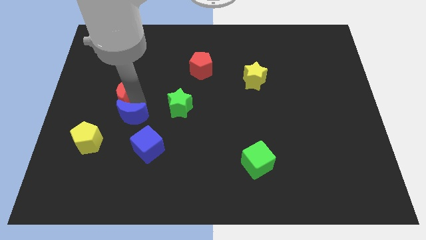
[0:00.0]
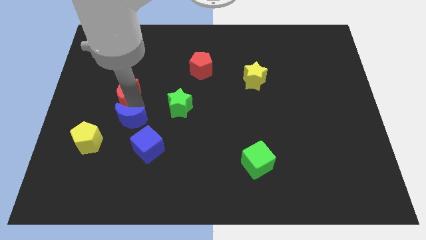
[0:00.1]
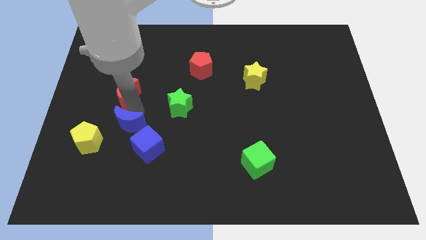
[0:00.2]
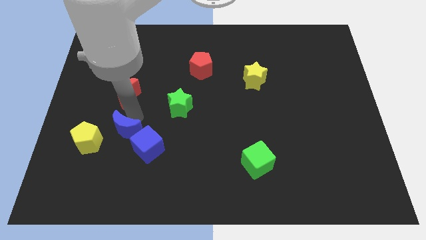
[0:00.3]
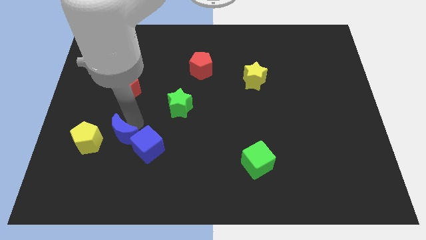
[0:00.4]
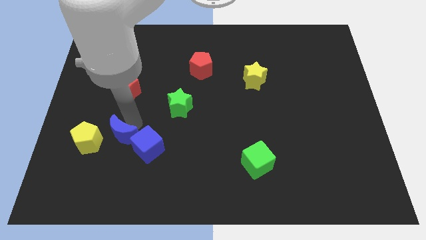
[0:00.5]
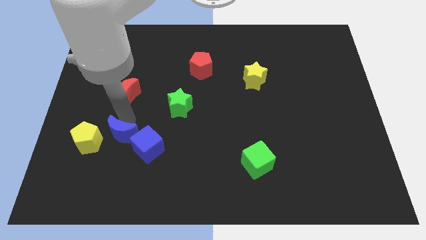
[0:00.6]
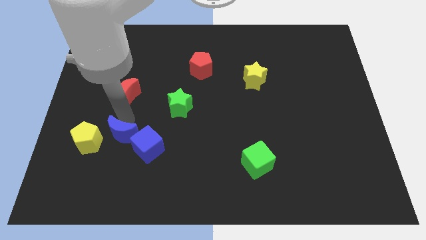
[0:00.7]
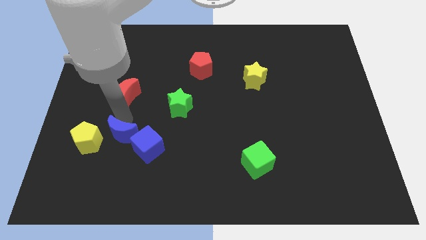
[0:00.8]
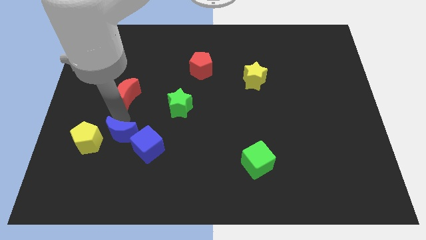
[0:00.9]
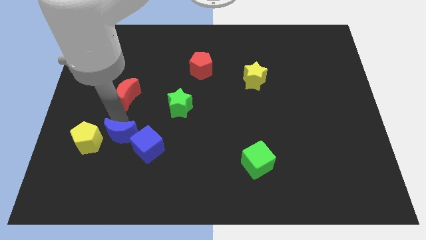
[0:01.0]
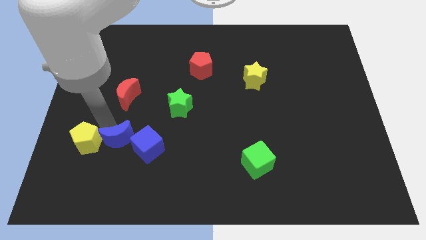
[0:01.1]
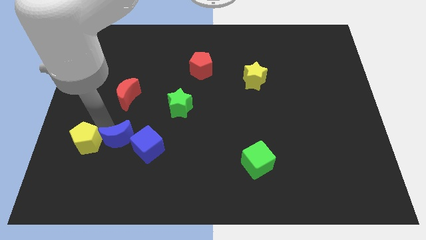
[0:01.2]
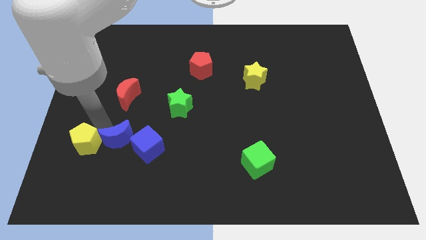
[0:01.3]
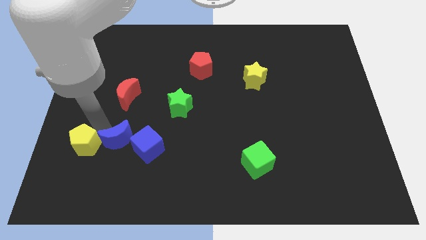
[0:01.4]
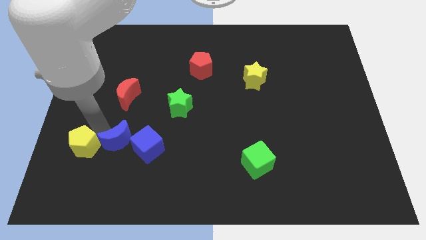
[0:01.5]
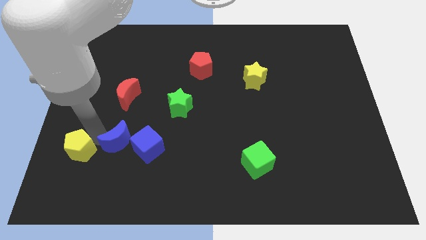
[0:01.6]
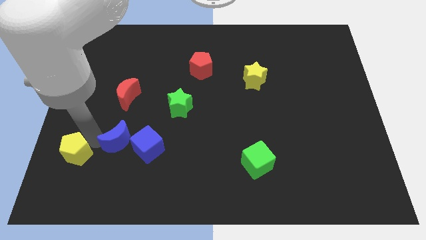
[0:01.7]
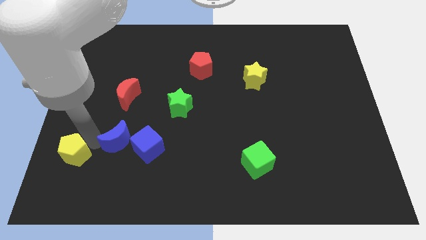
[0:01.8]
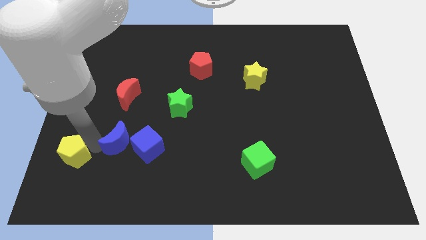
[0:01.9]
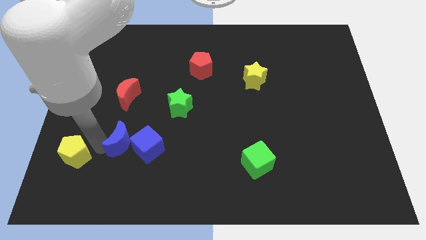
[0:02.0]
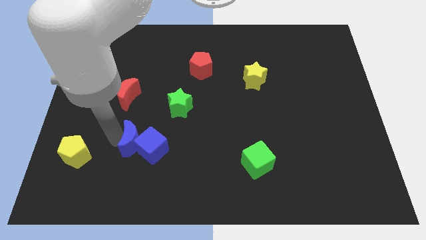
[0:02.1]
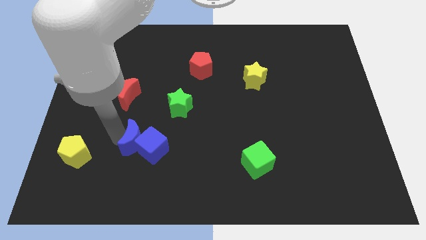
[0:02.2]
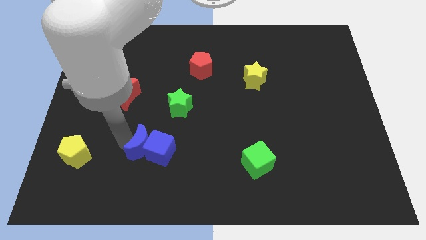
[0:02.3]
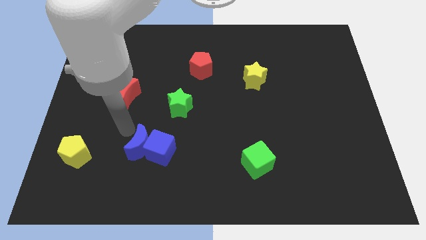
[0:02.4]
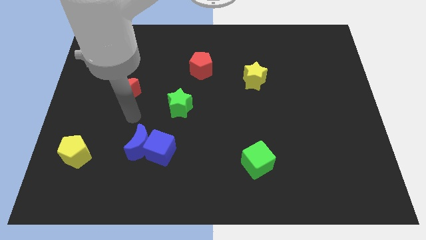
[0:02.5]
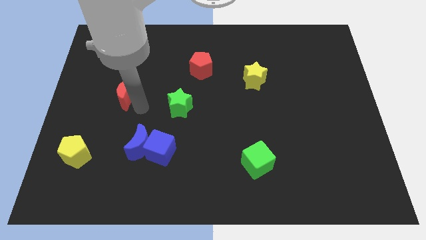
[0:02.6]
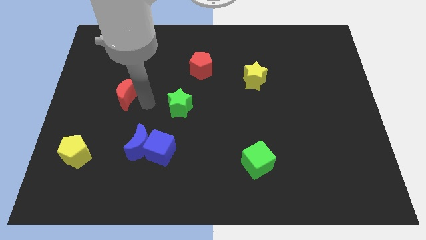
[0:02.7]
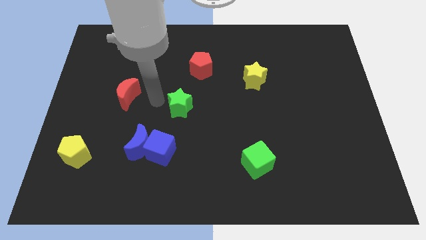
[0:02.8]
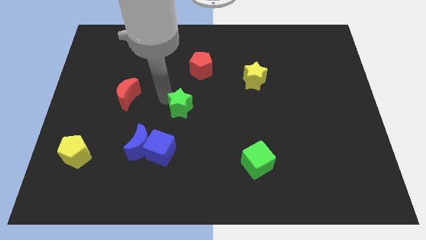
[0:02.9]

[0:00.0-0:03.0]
group up the blue blocks together at the right side of the yellow pentagon

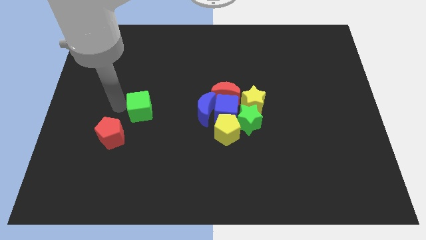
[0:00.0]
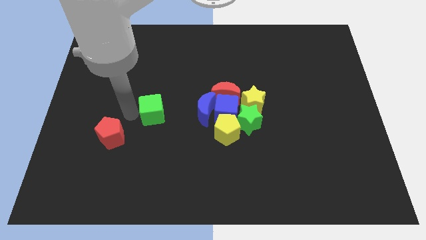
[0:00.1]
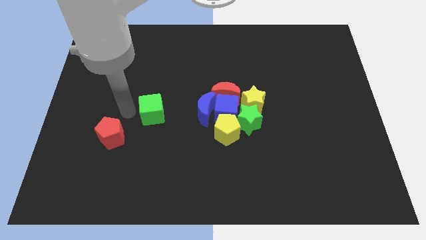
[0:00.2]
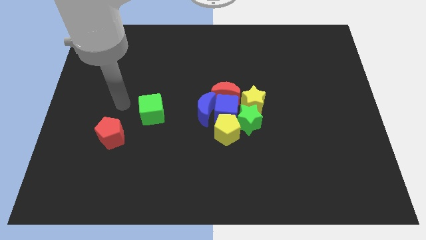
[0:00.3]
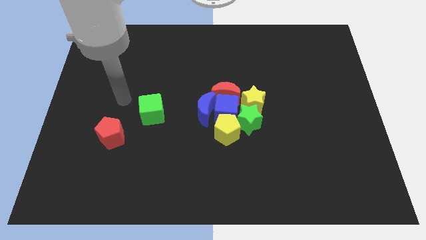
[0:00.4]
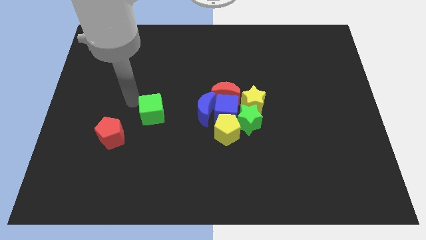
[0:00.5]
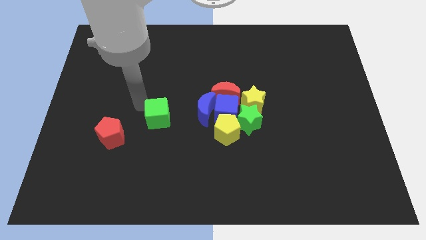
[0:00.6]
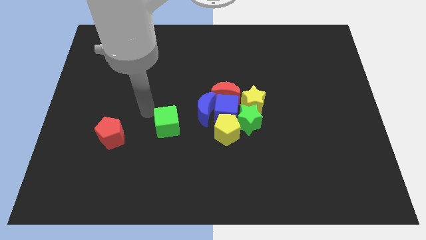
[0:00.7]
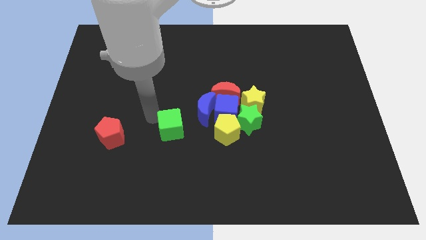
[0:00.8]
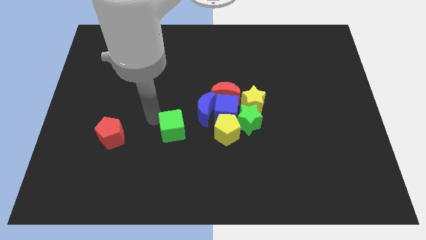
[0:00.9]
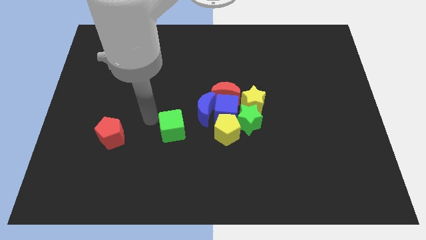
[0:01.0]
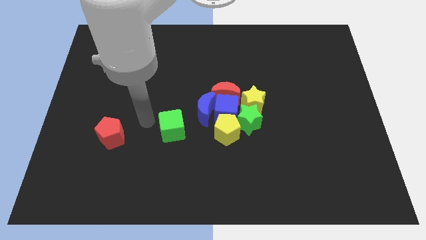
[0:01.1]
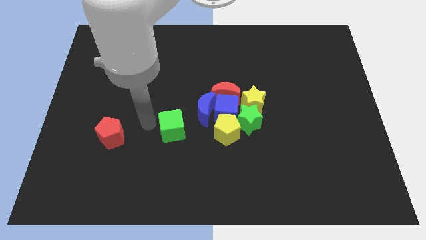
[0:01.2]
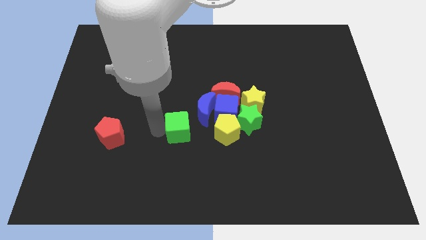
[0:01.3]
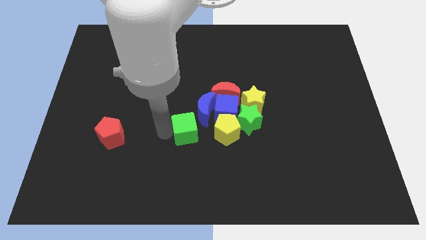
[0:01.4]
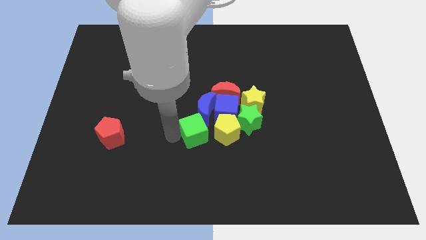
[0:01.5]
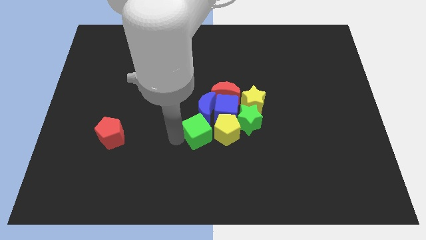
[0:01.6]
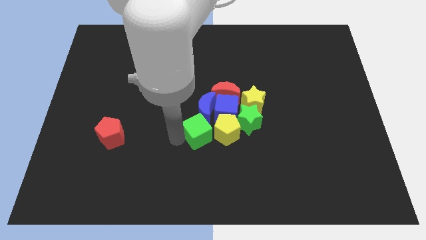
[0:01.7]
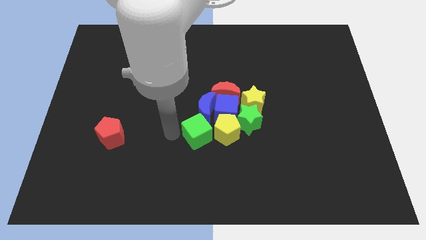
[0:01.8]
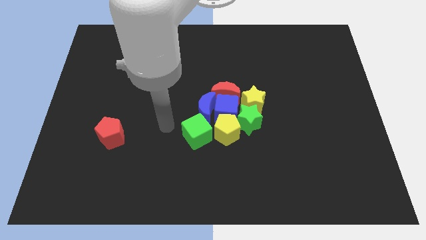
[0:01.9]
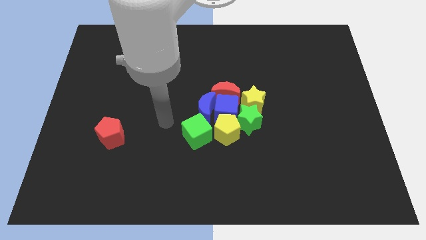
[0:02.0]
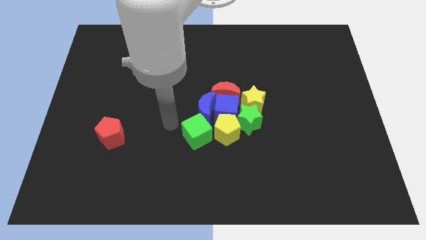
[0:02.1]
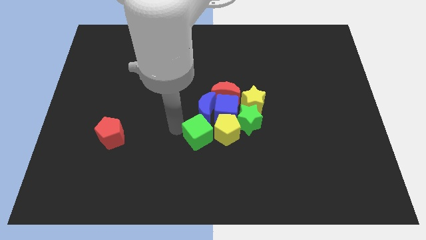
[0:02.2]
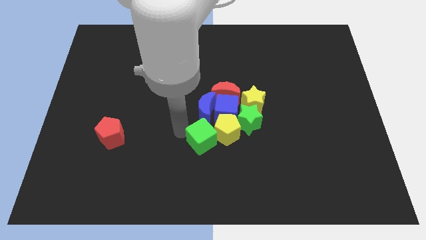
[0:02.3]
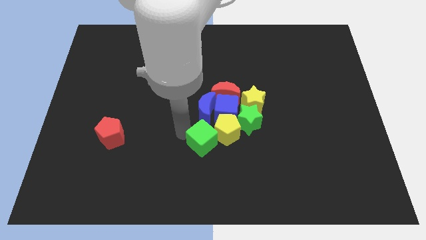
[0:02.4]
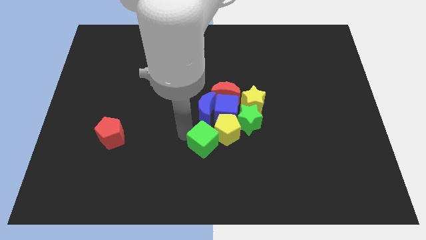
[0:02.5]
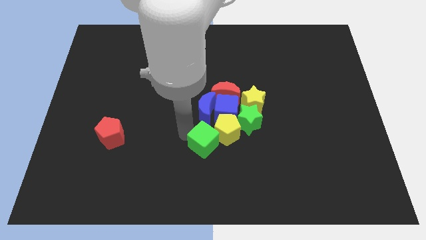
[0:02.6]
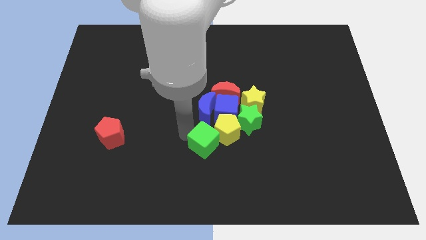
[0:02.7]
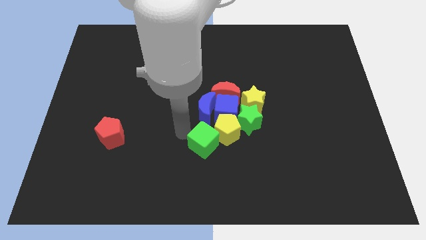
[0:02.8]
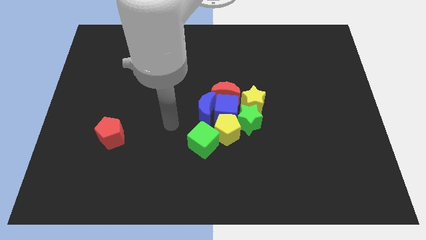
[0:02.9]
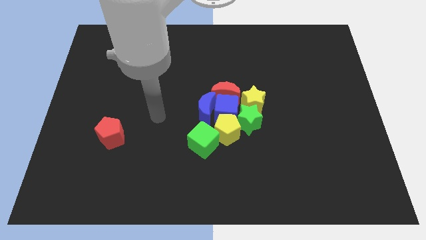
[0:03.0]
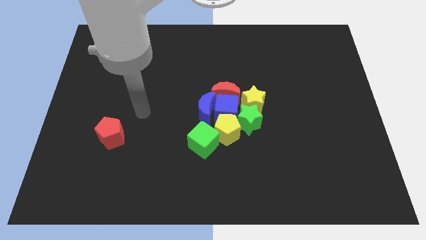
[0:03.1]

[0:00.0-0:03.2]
add the green cube into group of blocks

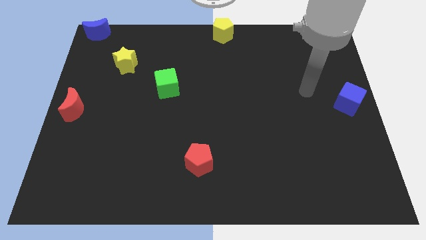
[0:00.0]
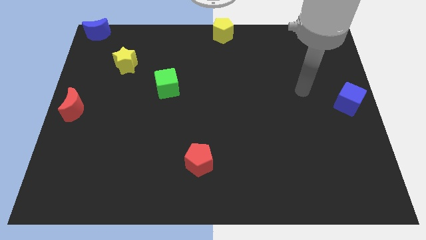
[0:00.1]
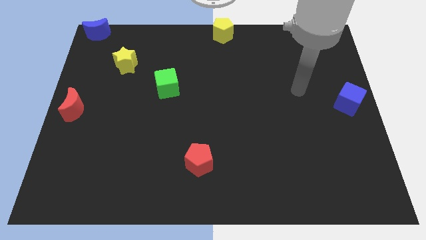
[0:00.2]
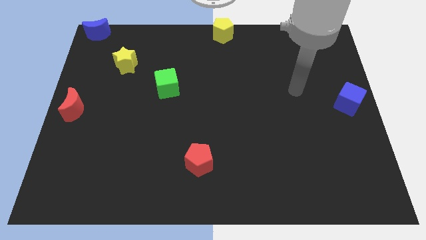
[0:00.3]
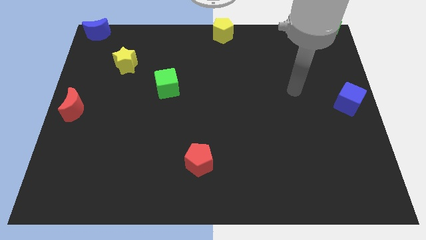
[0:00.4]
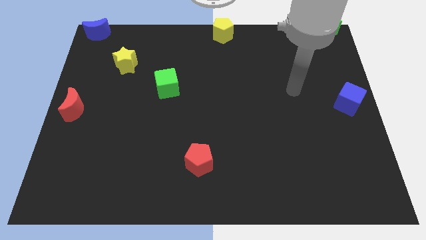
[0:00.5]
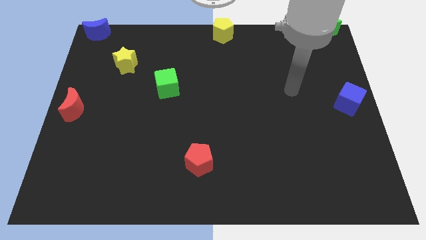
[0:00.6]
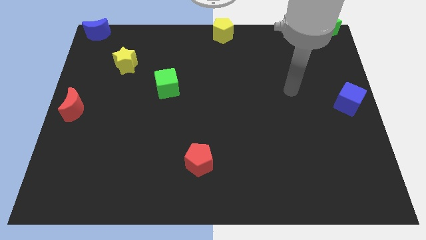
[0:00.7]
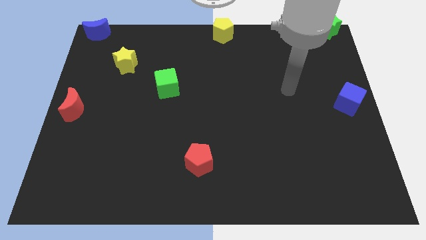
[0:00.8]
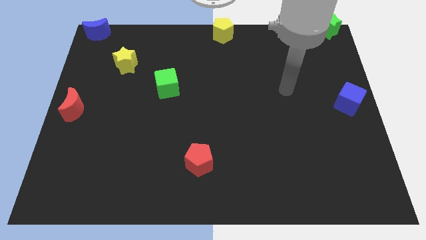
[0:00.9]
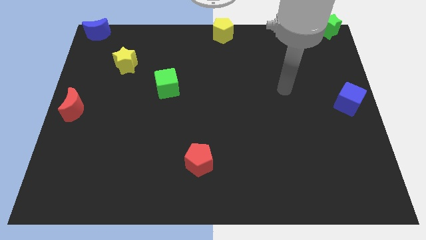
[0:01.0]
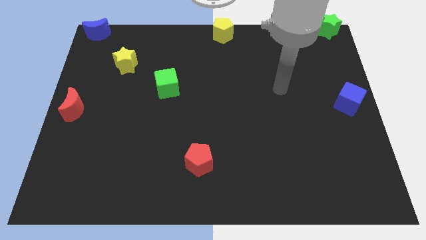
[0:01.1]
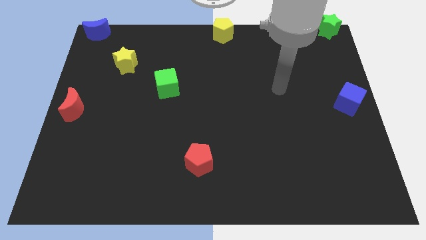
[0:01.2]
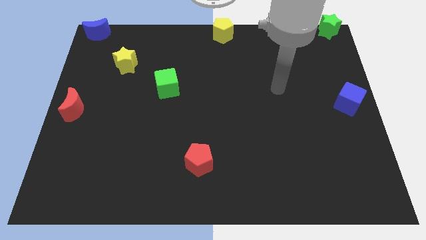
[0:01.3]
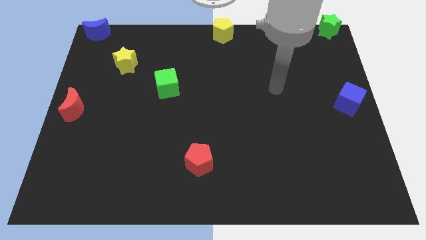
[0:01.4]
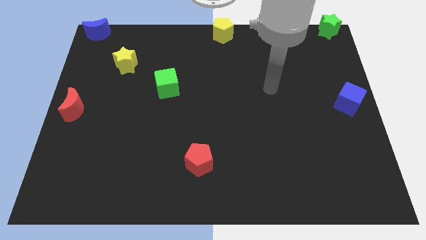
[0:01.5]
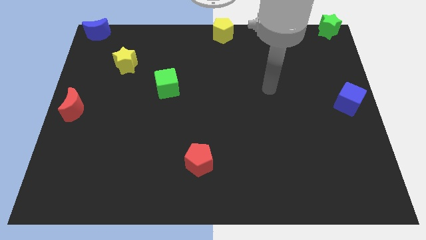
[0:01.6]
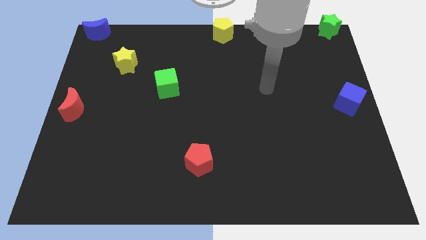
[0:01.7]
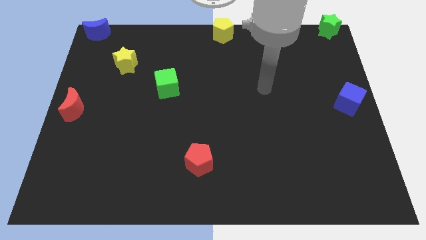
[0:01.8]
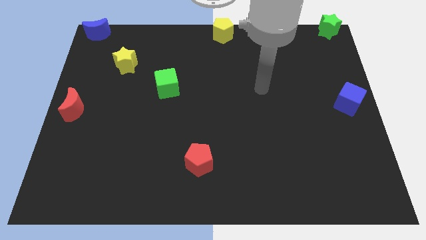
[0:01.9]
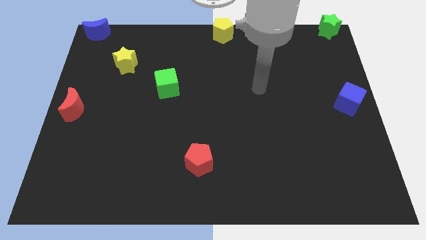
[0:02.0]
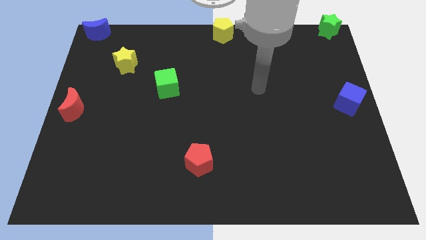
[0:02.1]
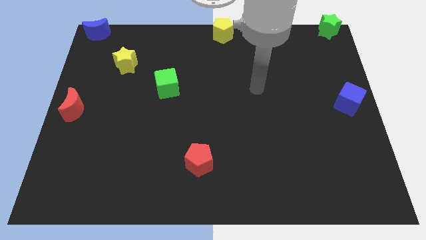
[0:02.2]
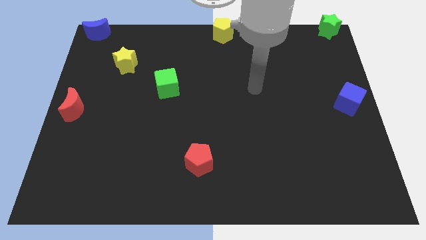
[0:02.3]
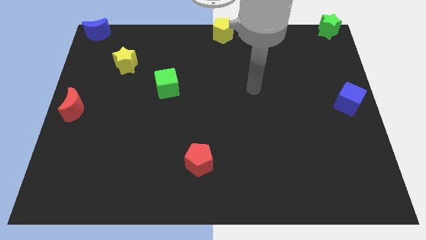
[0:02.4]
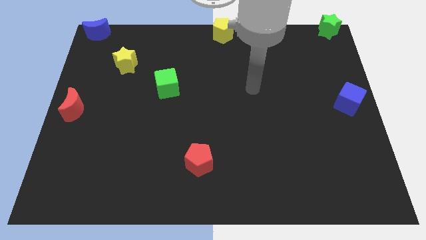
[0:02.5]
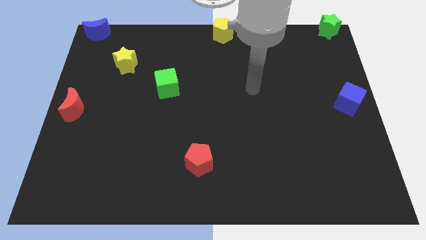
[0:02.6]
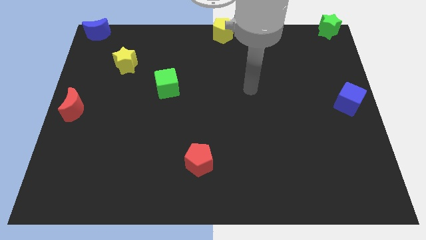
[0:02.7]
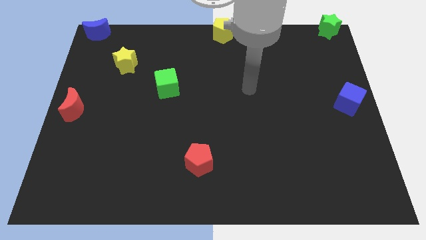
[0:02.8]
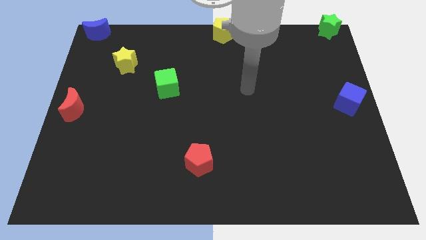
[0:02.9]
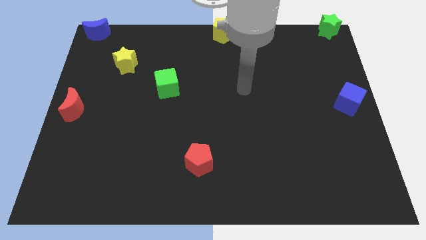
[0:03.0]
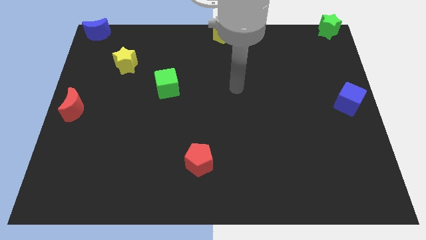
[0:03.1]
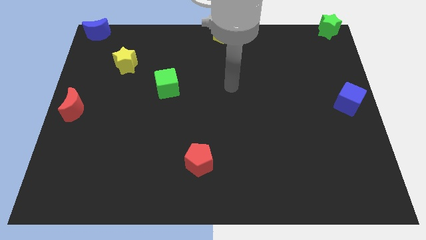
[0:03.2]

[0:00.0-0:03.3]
move arm towards middle of the board
